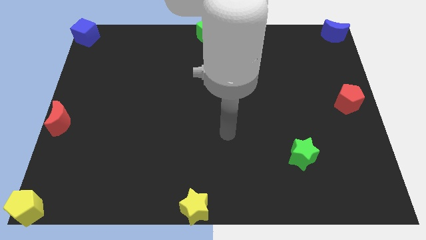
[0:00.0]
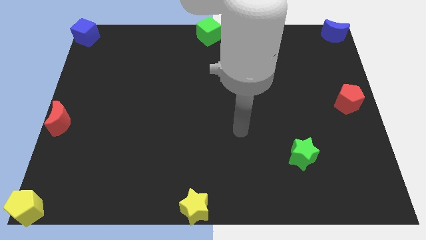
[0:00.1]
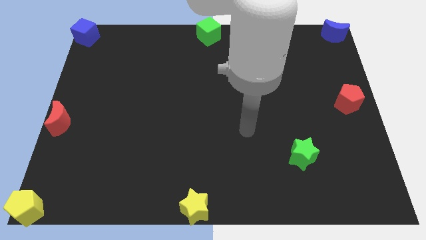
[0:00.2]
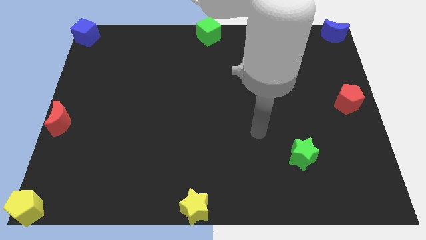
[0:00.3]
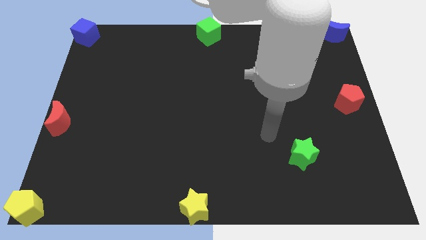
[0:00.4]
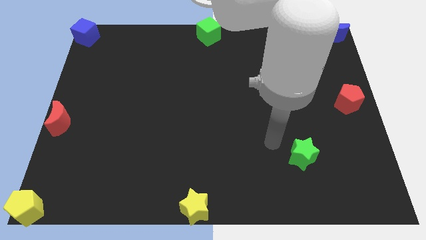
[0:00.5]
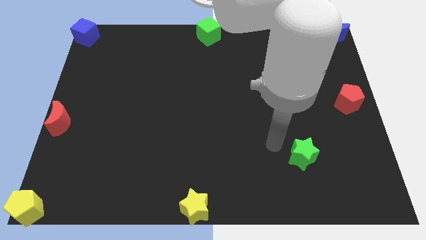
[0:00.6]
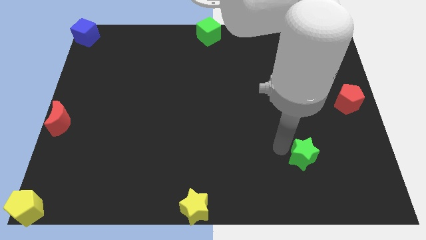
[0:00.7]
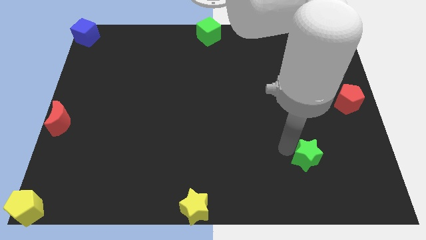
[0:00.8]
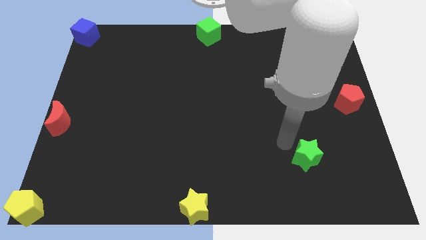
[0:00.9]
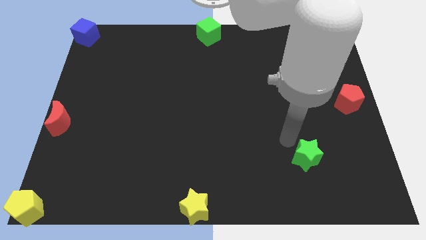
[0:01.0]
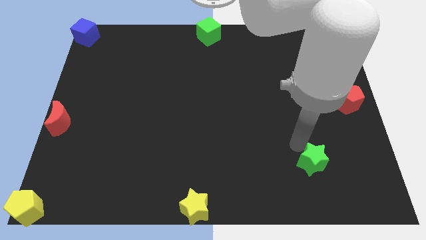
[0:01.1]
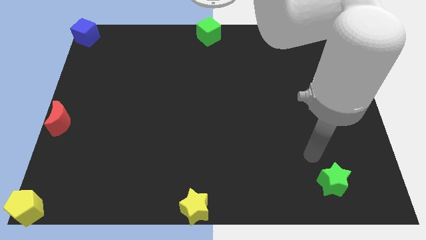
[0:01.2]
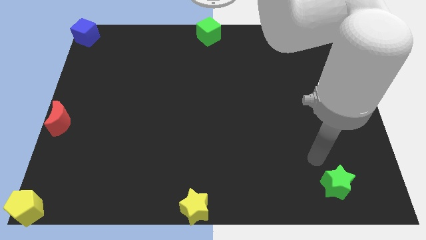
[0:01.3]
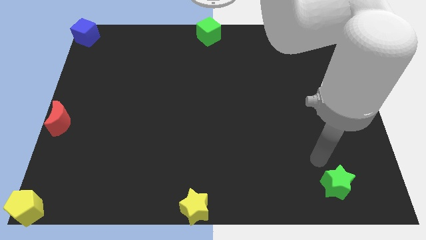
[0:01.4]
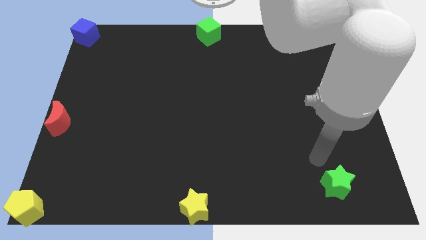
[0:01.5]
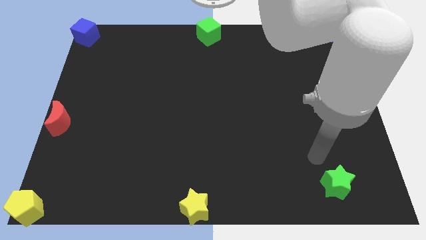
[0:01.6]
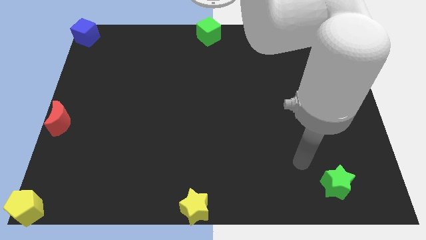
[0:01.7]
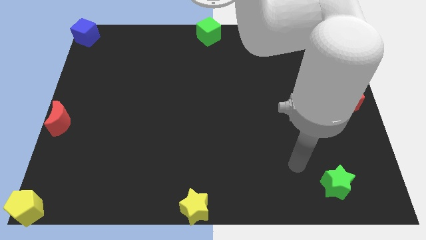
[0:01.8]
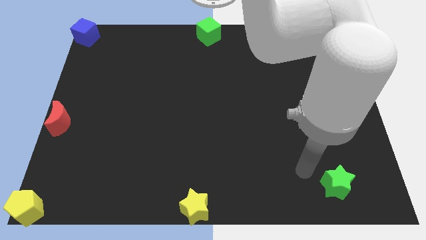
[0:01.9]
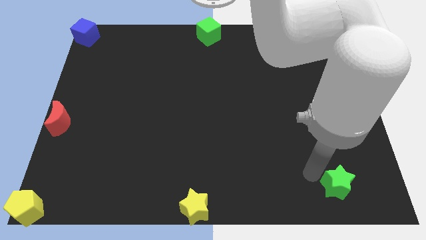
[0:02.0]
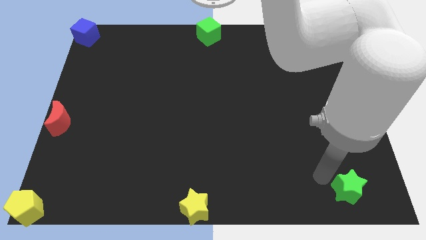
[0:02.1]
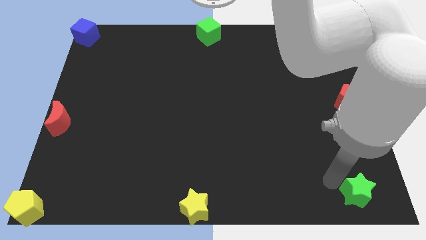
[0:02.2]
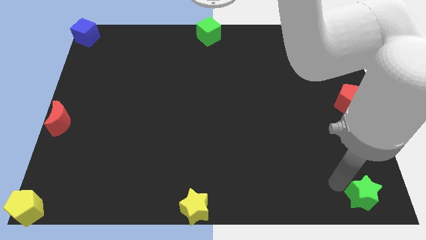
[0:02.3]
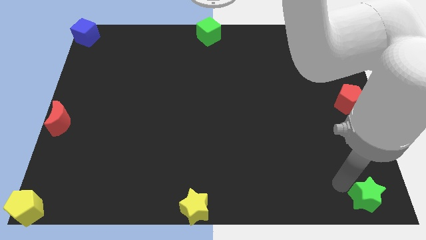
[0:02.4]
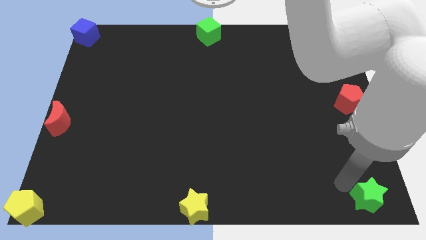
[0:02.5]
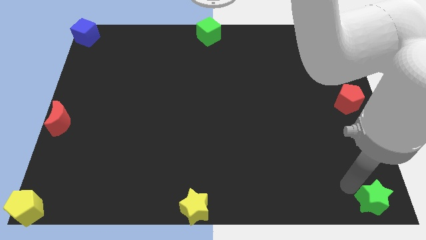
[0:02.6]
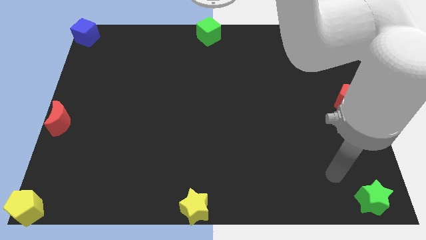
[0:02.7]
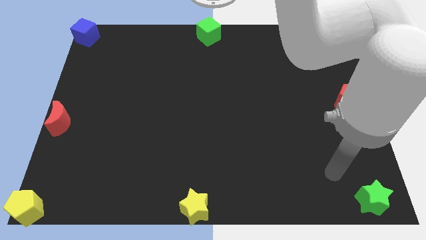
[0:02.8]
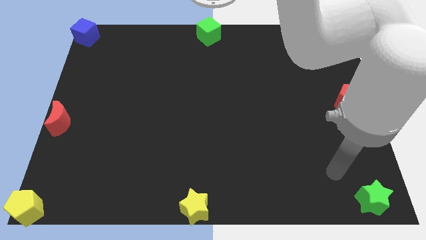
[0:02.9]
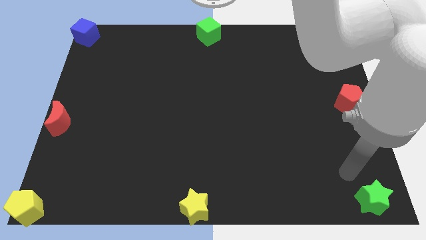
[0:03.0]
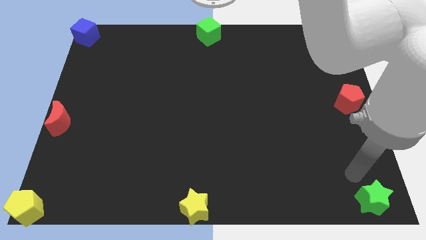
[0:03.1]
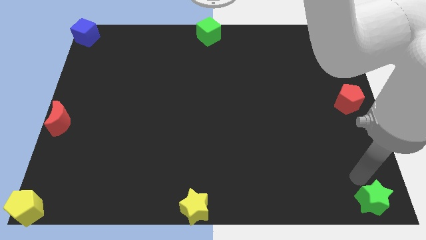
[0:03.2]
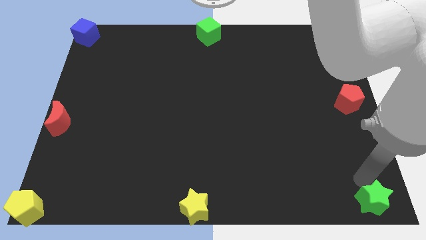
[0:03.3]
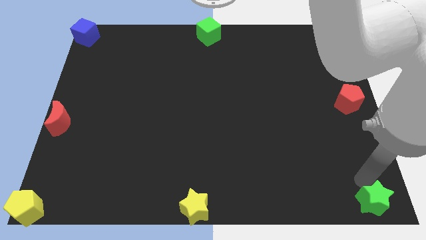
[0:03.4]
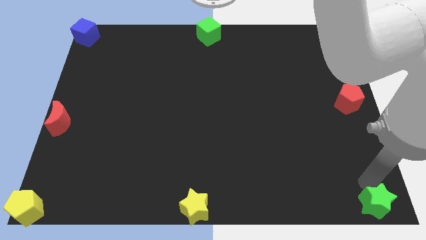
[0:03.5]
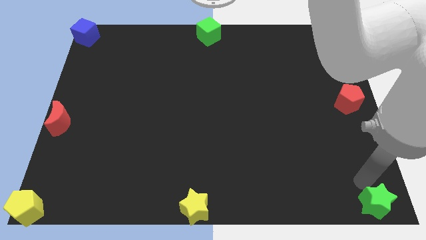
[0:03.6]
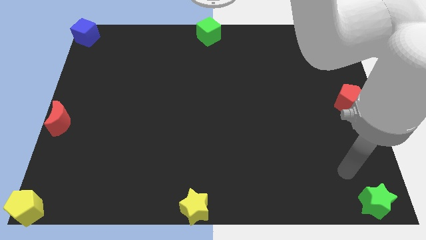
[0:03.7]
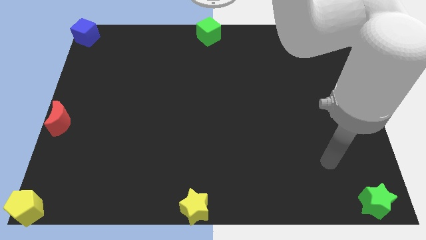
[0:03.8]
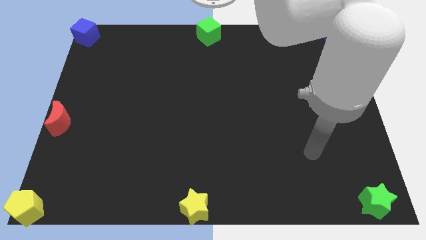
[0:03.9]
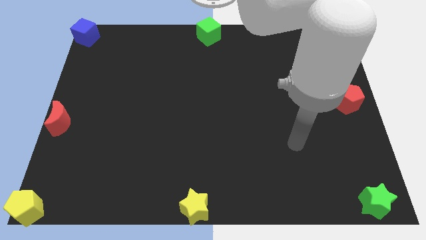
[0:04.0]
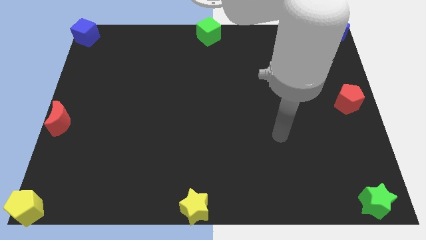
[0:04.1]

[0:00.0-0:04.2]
slide the green star at the bottom right corner of the board

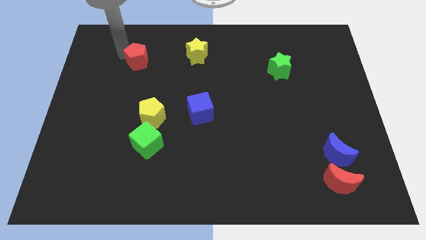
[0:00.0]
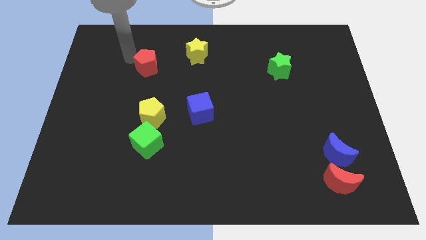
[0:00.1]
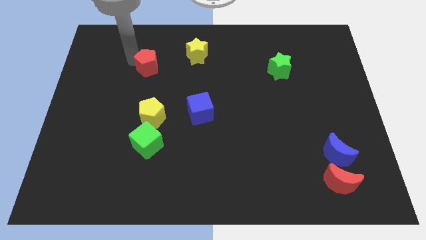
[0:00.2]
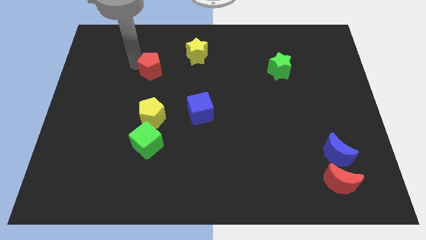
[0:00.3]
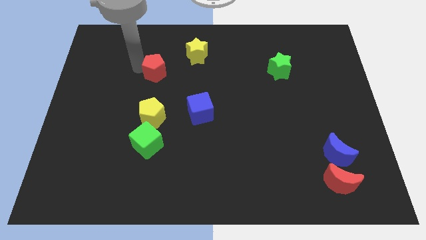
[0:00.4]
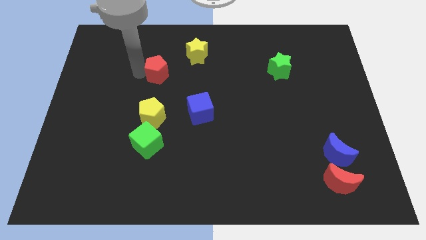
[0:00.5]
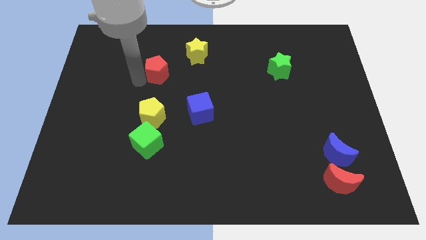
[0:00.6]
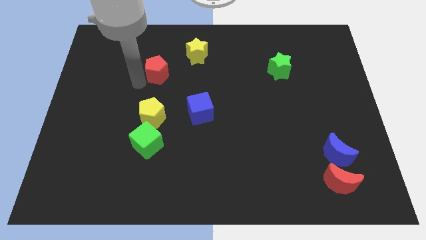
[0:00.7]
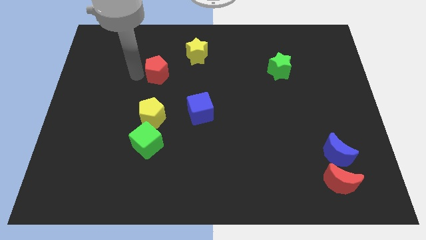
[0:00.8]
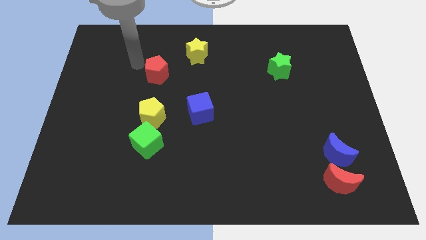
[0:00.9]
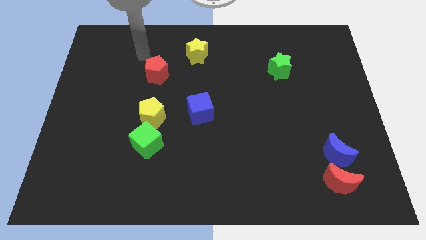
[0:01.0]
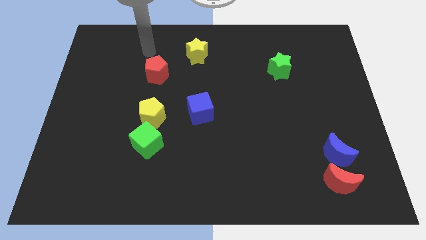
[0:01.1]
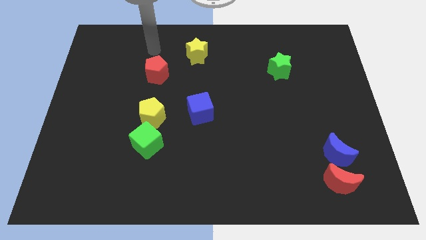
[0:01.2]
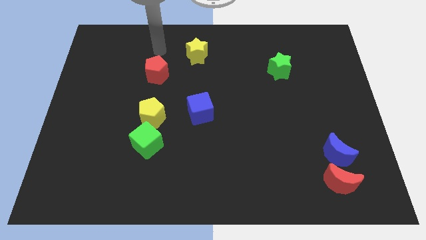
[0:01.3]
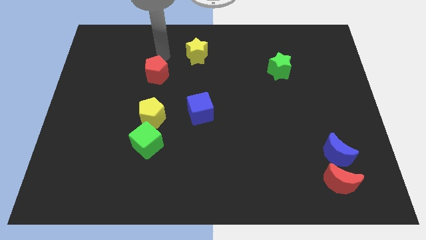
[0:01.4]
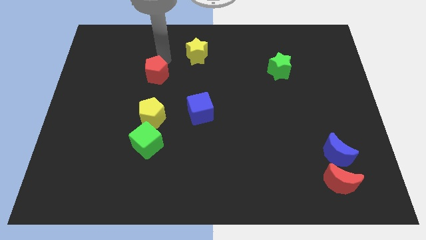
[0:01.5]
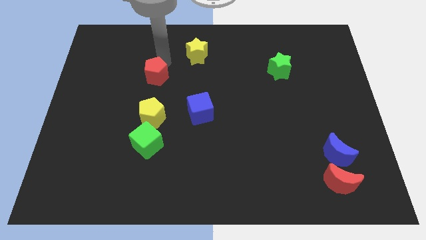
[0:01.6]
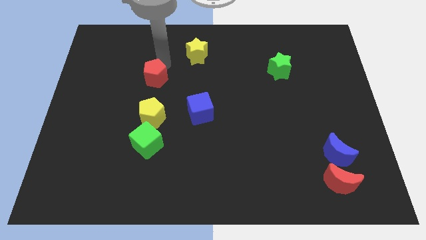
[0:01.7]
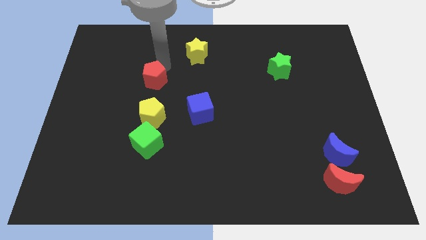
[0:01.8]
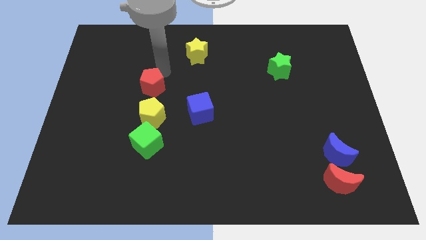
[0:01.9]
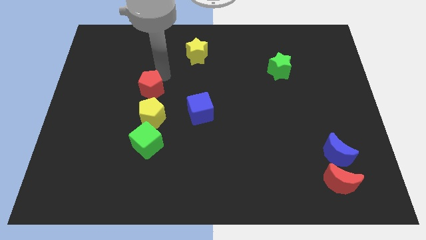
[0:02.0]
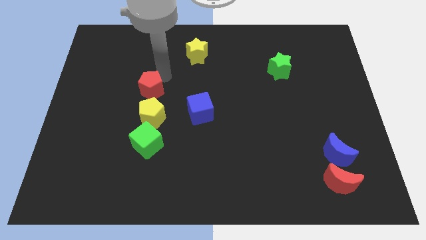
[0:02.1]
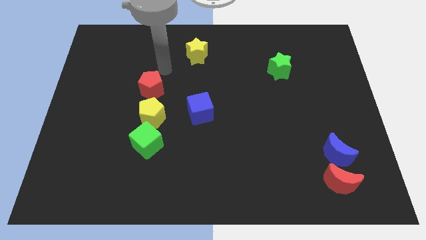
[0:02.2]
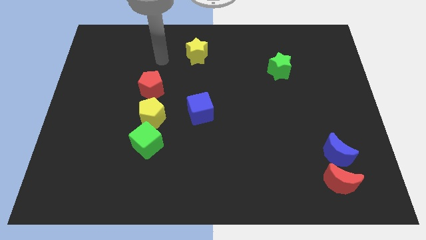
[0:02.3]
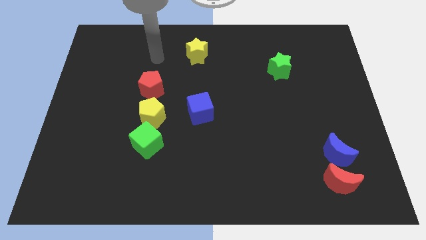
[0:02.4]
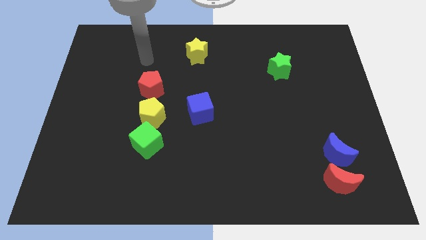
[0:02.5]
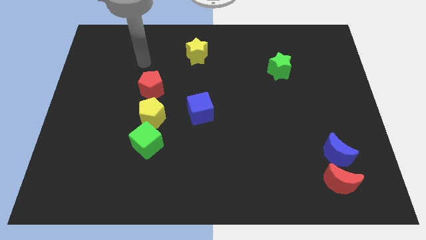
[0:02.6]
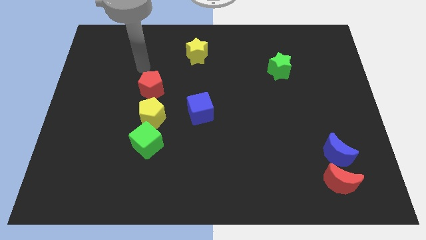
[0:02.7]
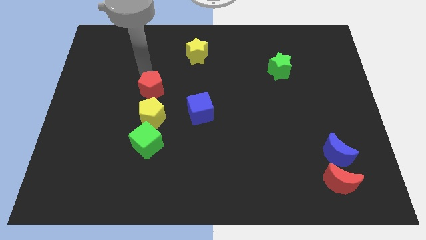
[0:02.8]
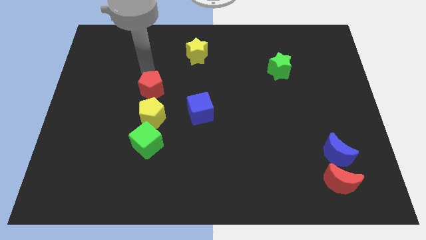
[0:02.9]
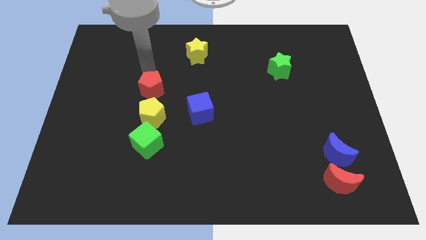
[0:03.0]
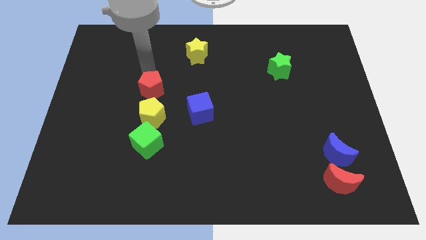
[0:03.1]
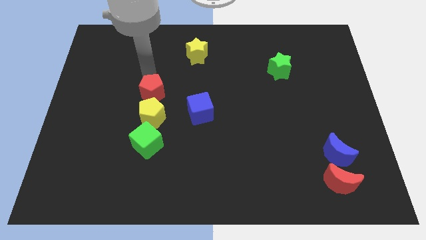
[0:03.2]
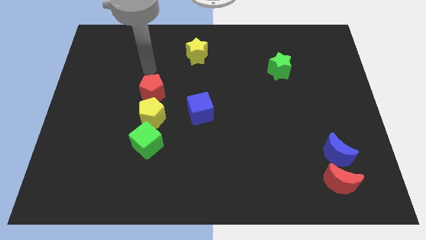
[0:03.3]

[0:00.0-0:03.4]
move the red pentagon close to the top side of the yellow pentagon

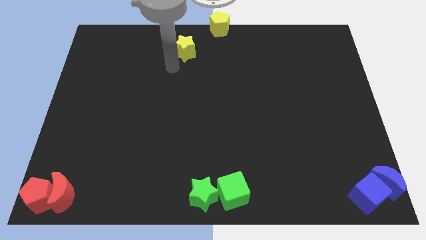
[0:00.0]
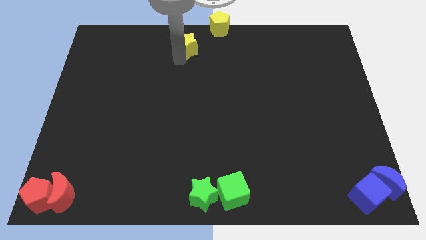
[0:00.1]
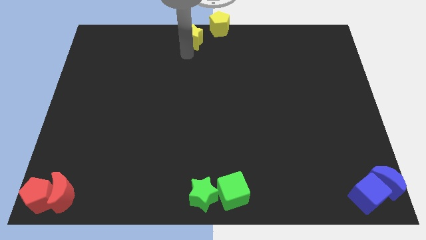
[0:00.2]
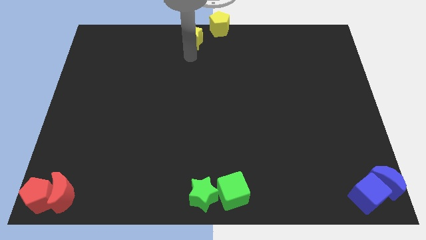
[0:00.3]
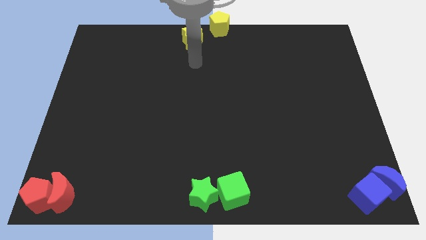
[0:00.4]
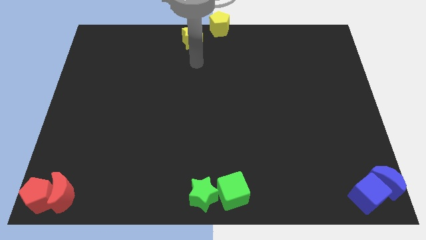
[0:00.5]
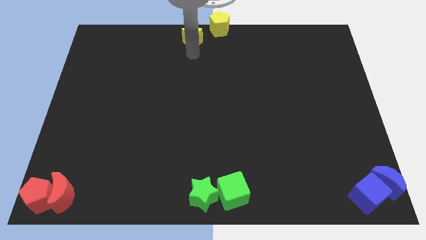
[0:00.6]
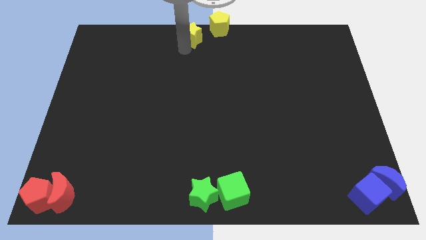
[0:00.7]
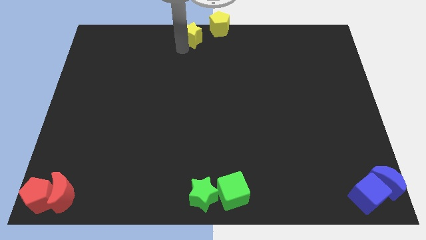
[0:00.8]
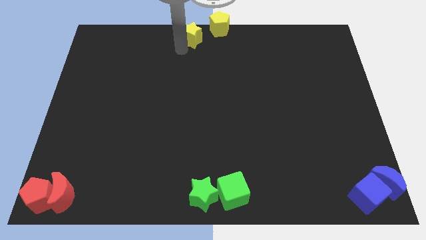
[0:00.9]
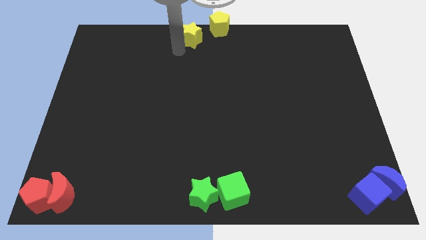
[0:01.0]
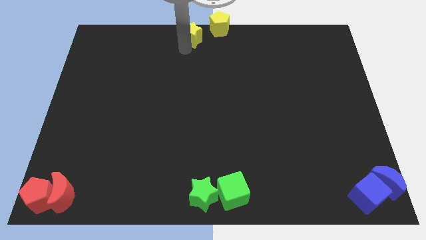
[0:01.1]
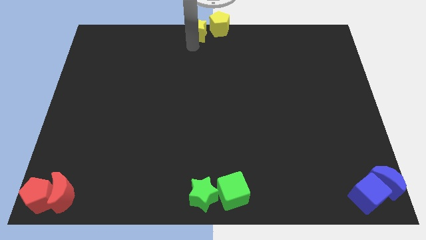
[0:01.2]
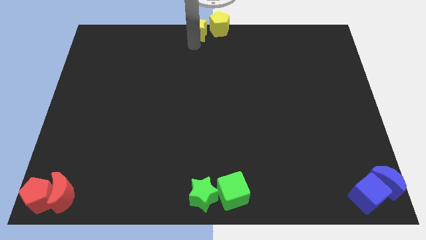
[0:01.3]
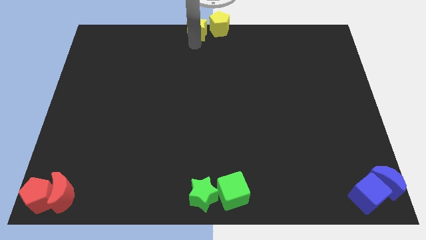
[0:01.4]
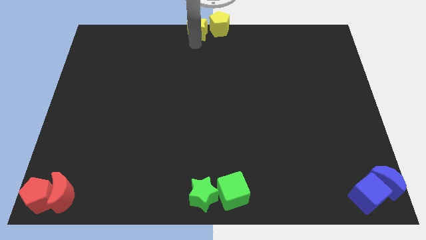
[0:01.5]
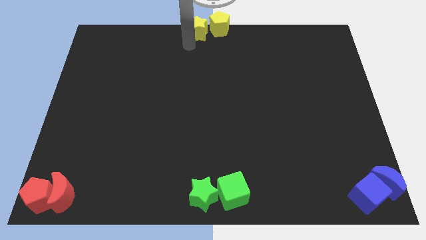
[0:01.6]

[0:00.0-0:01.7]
place the yellow star left to the yellow pentagon
